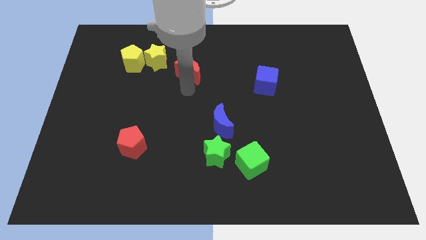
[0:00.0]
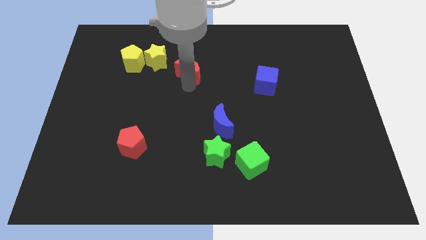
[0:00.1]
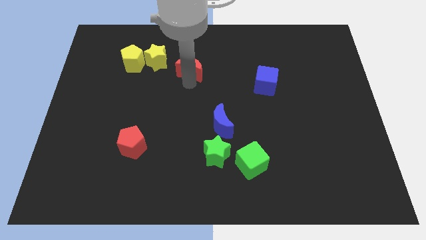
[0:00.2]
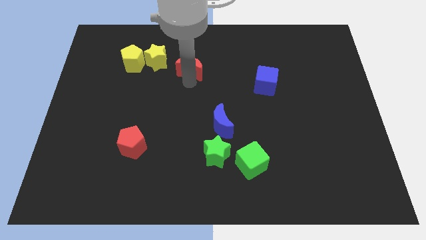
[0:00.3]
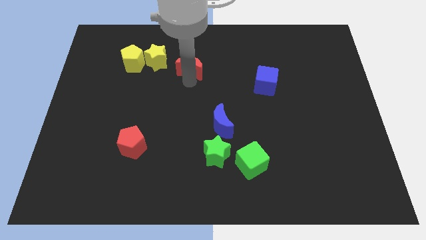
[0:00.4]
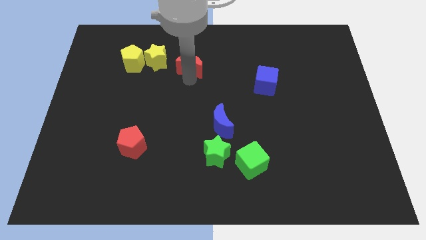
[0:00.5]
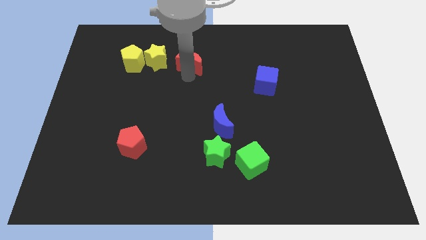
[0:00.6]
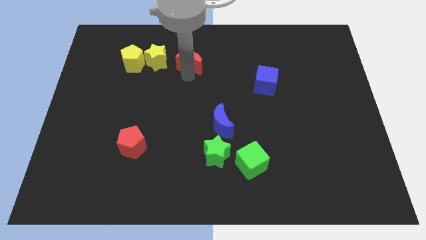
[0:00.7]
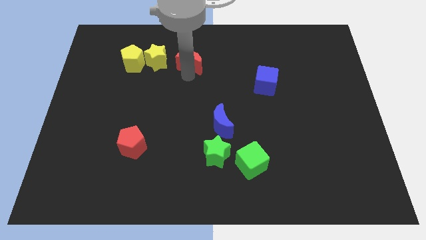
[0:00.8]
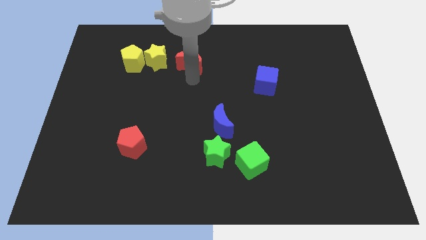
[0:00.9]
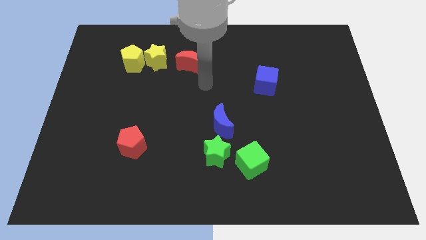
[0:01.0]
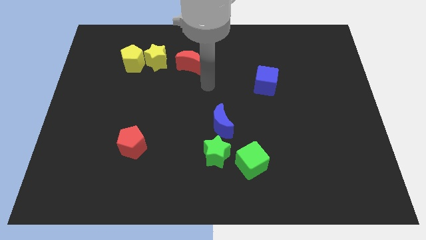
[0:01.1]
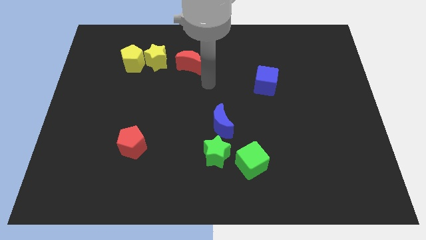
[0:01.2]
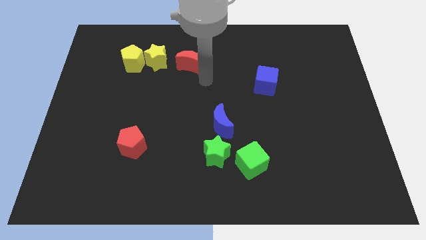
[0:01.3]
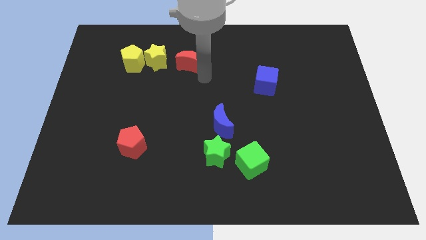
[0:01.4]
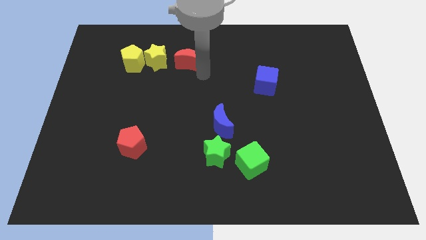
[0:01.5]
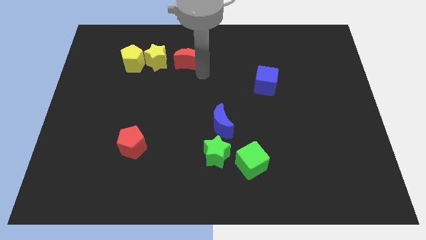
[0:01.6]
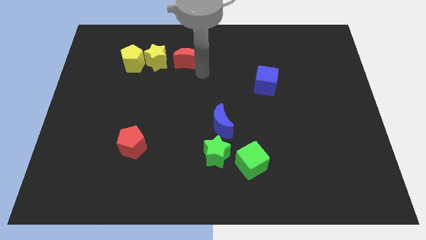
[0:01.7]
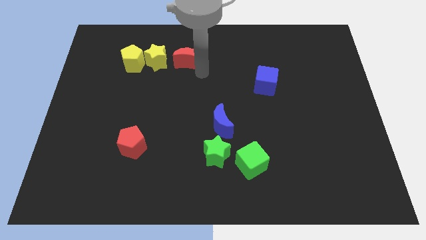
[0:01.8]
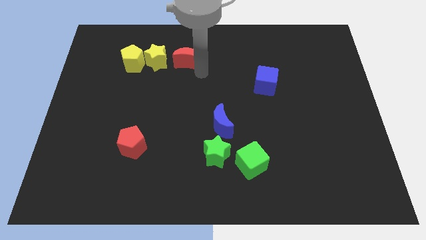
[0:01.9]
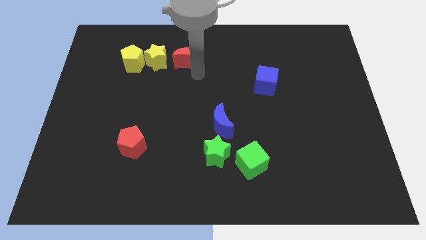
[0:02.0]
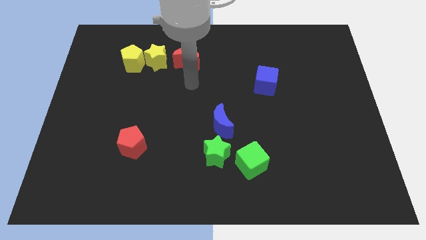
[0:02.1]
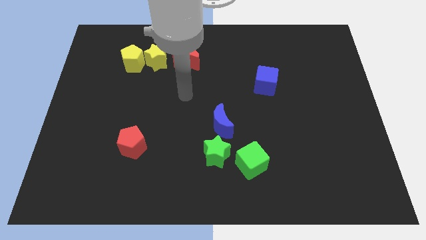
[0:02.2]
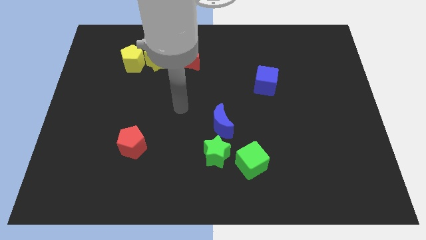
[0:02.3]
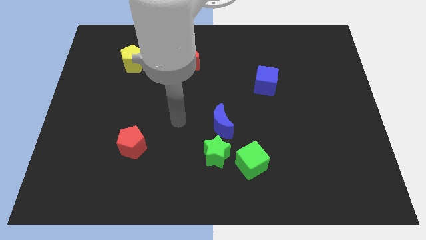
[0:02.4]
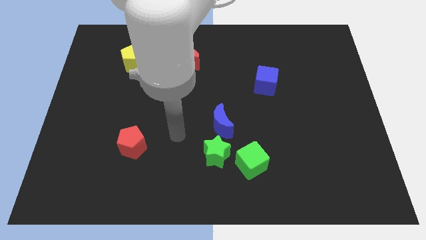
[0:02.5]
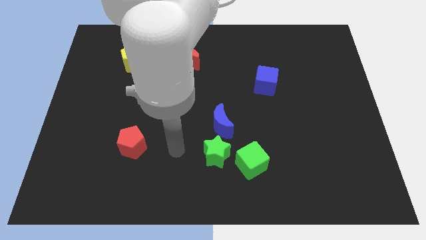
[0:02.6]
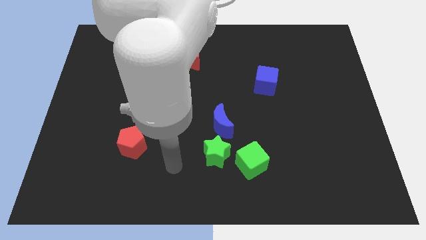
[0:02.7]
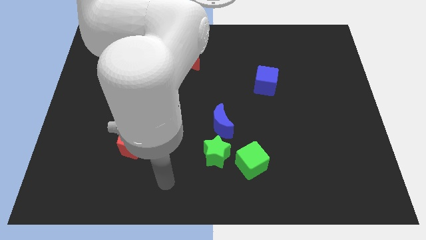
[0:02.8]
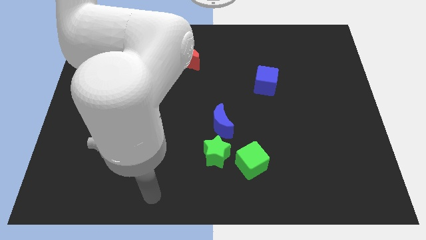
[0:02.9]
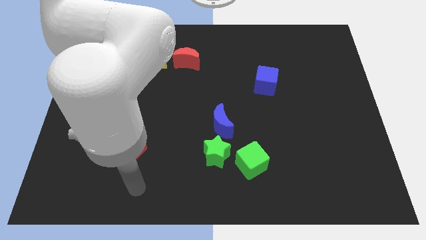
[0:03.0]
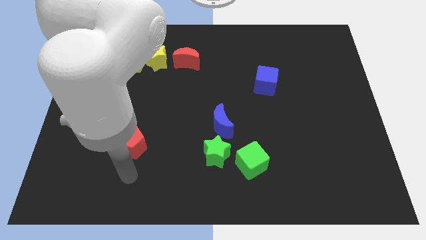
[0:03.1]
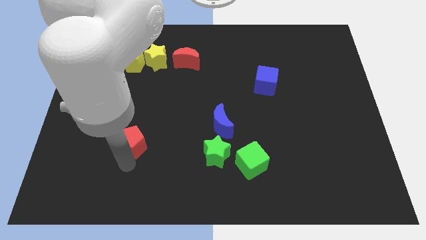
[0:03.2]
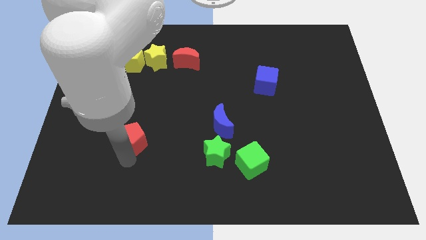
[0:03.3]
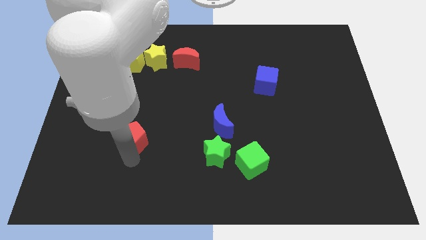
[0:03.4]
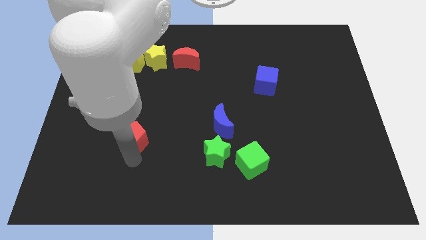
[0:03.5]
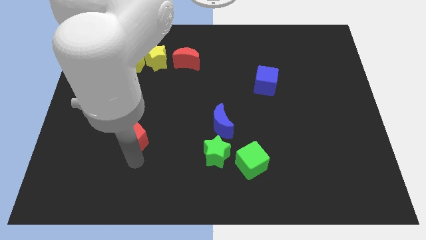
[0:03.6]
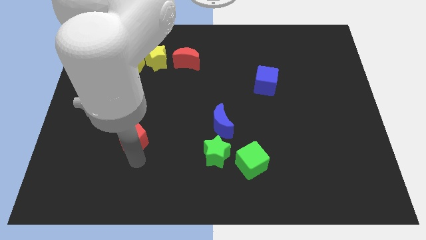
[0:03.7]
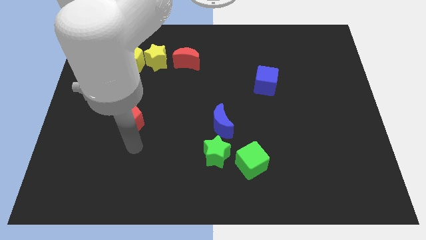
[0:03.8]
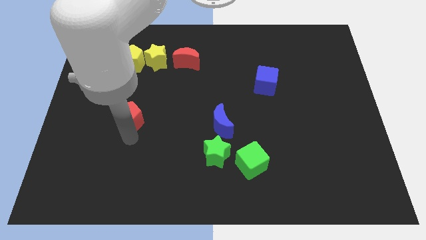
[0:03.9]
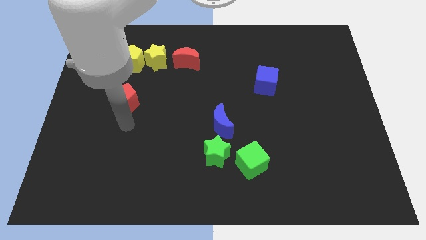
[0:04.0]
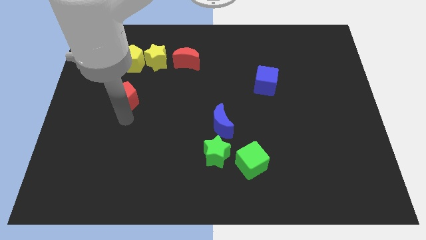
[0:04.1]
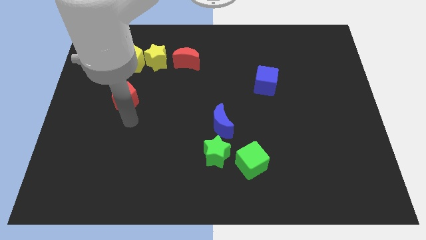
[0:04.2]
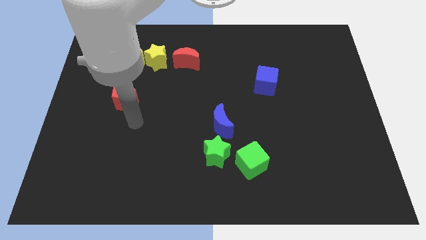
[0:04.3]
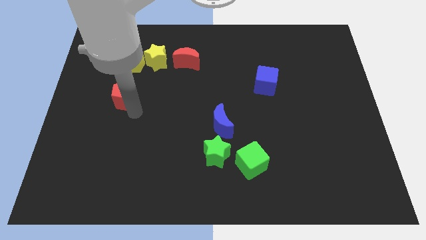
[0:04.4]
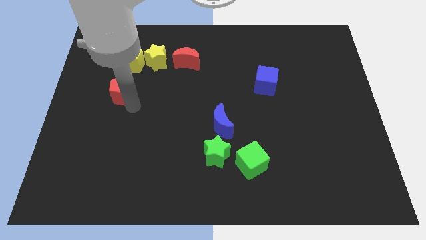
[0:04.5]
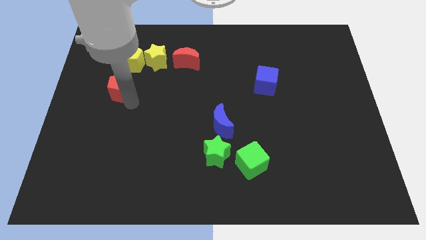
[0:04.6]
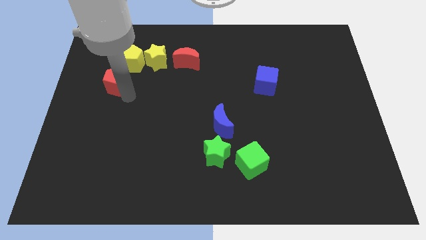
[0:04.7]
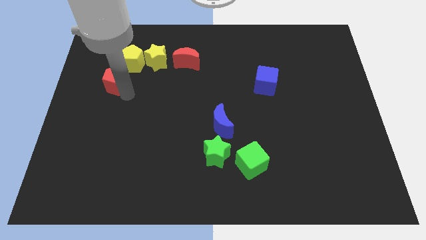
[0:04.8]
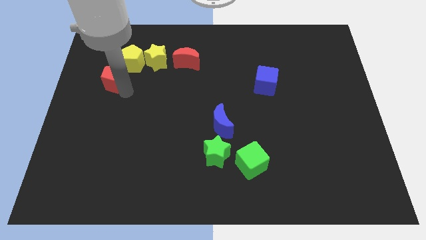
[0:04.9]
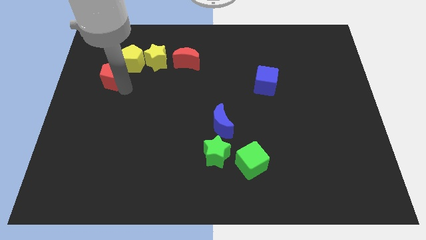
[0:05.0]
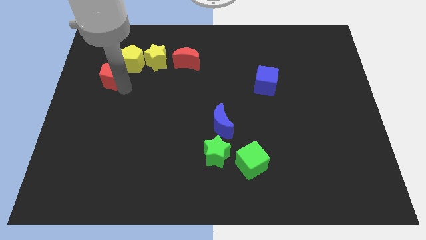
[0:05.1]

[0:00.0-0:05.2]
put the red pentagon to the bottom left of the yellow pentagon

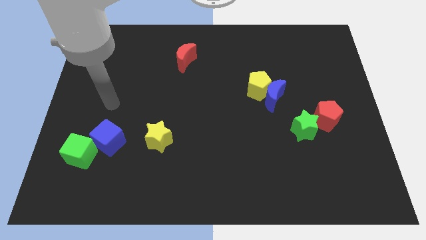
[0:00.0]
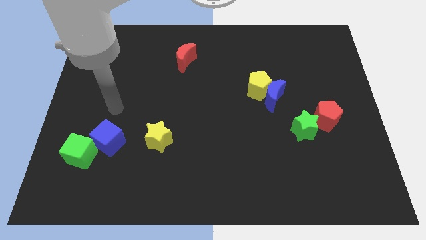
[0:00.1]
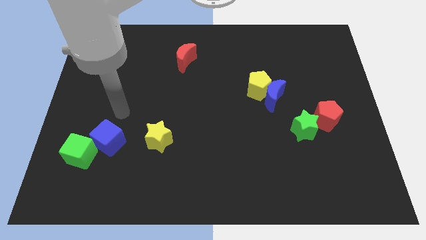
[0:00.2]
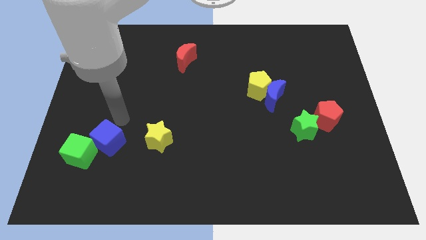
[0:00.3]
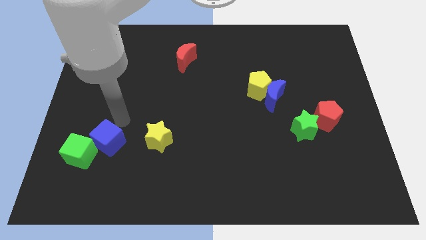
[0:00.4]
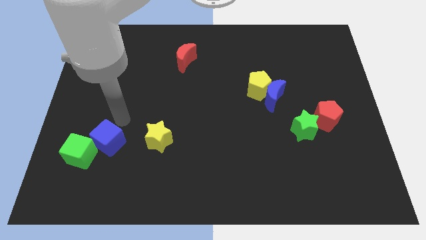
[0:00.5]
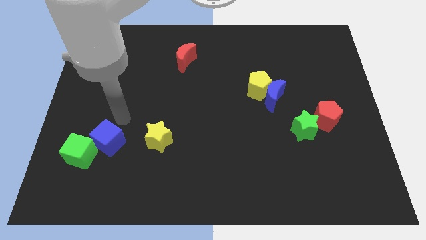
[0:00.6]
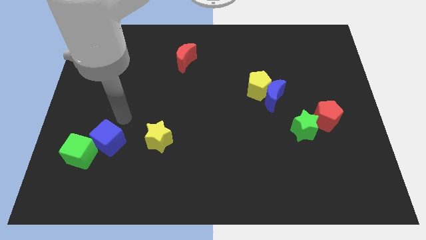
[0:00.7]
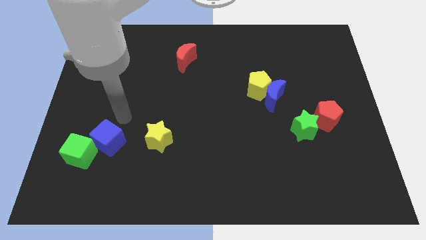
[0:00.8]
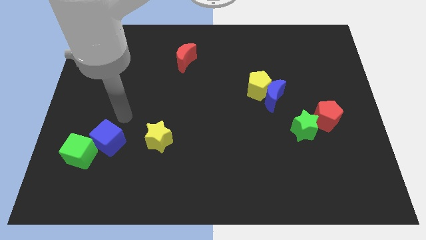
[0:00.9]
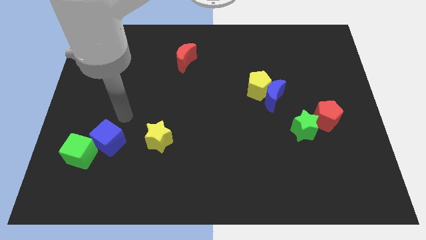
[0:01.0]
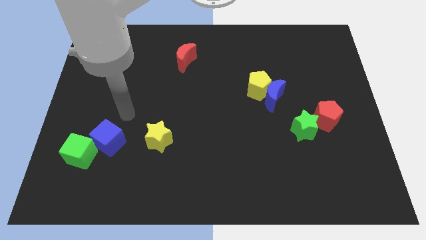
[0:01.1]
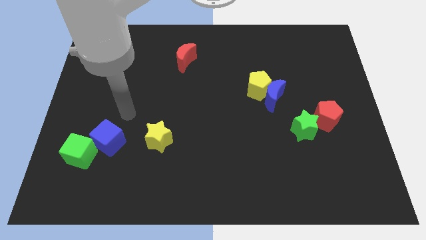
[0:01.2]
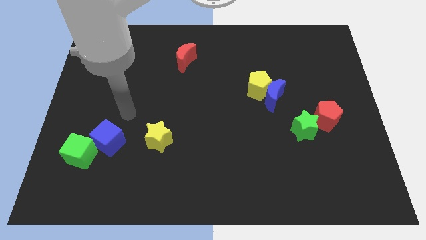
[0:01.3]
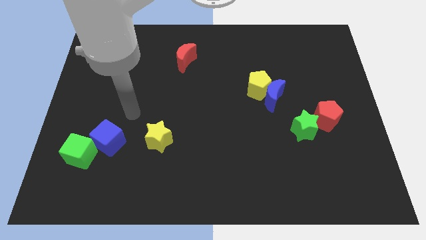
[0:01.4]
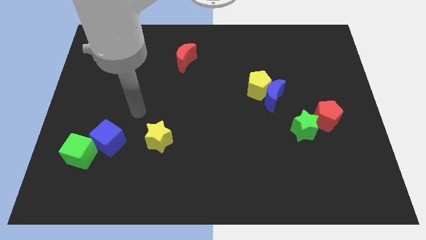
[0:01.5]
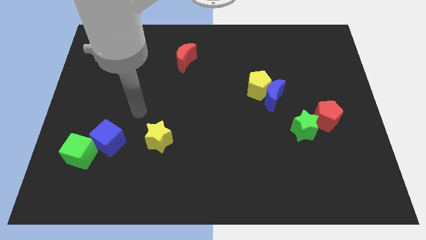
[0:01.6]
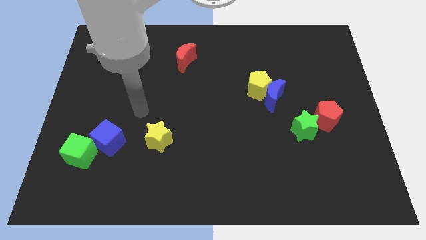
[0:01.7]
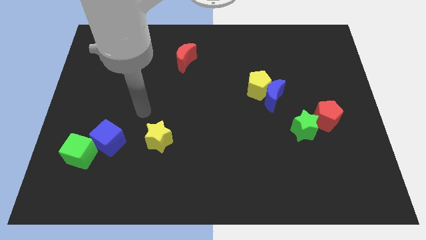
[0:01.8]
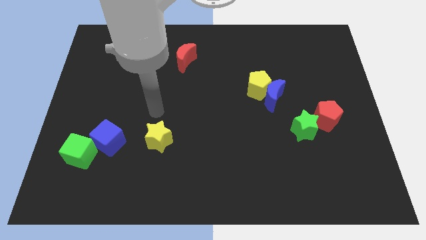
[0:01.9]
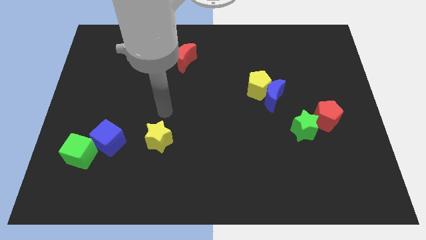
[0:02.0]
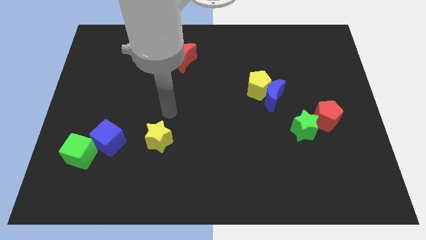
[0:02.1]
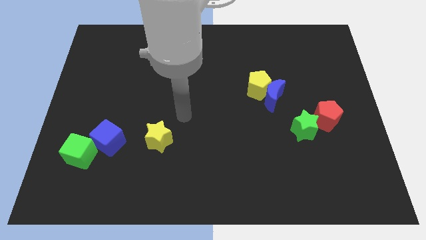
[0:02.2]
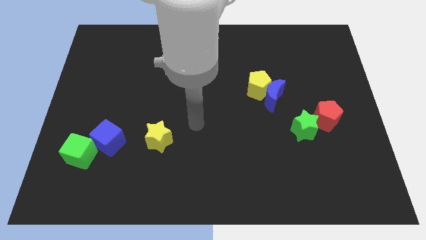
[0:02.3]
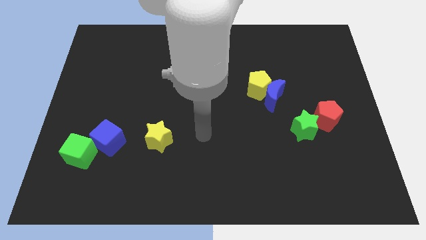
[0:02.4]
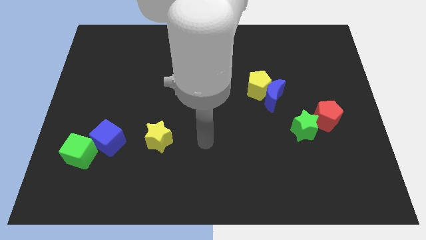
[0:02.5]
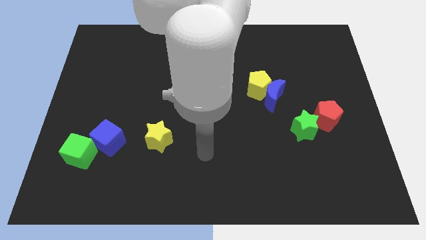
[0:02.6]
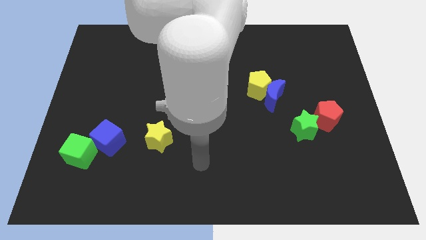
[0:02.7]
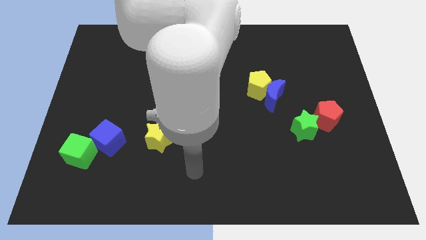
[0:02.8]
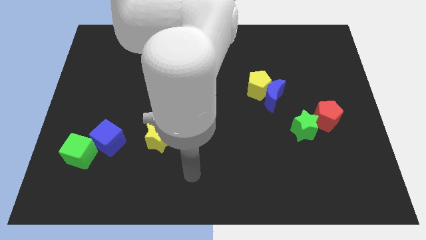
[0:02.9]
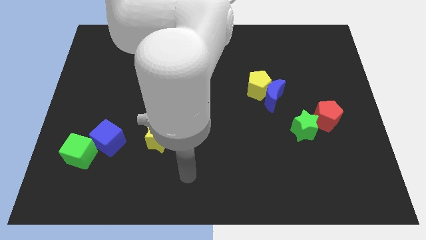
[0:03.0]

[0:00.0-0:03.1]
move your arm to the bottom right of yellow star

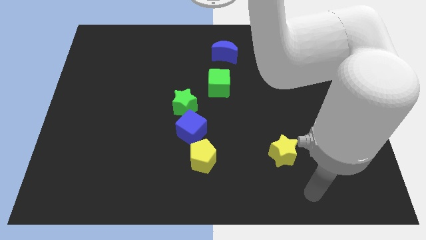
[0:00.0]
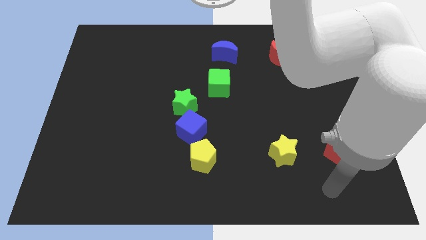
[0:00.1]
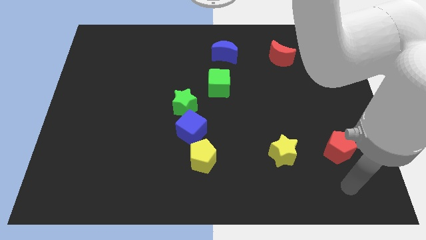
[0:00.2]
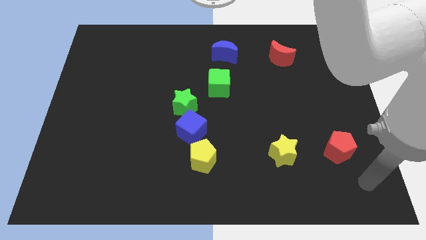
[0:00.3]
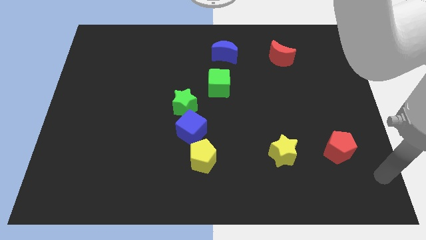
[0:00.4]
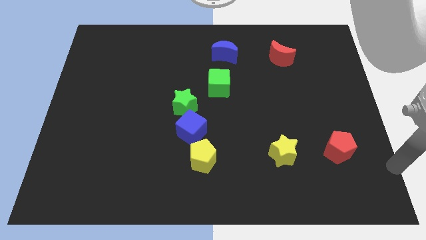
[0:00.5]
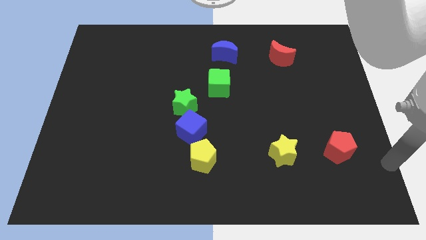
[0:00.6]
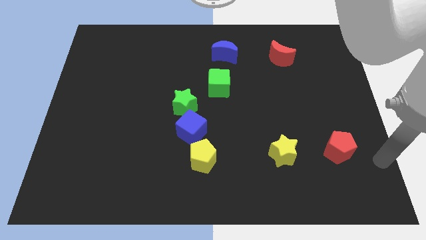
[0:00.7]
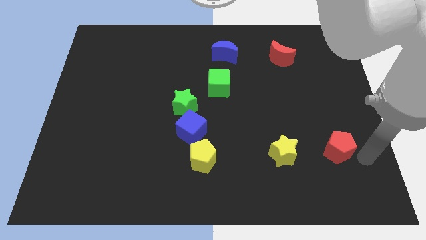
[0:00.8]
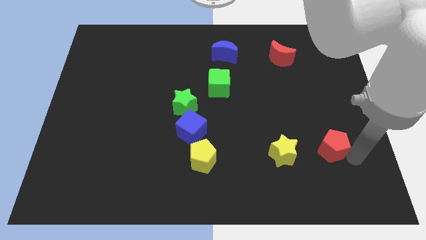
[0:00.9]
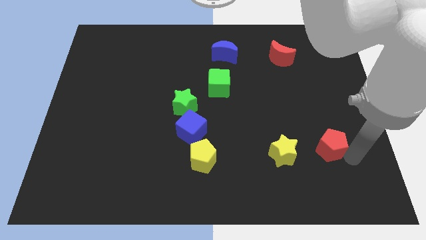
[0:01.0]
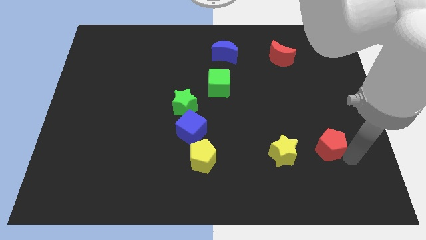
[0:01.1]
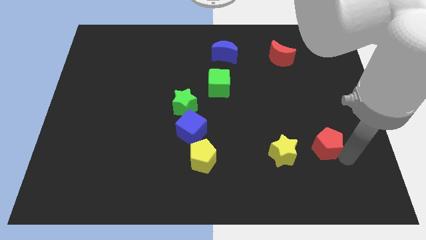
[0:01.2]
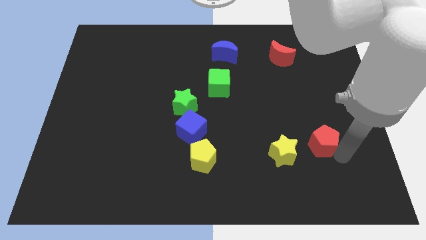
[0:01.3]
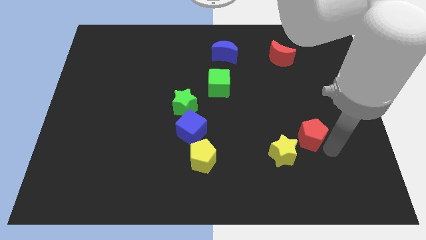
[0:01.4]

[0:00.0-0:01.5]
push the red pentagon slightly towards the yellow star
